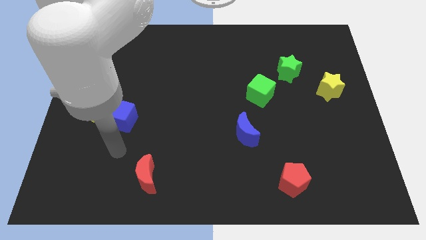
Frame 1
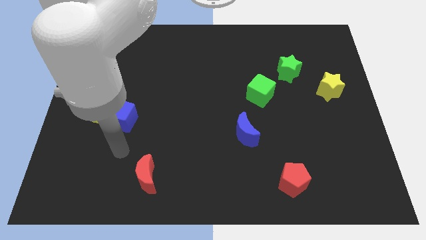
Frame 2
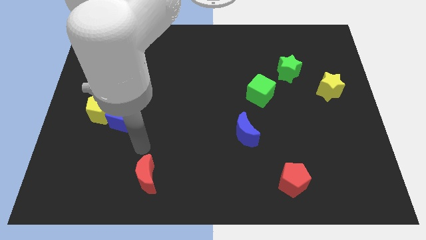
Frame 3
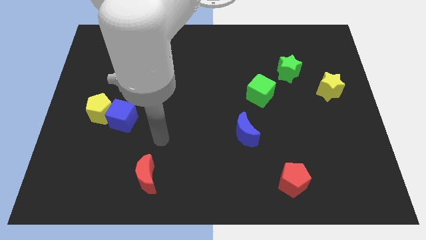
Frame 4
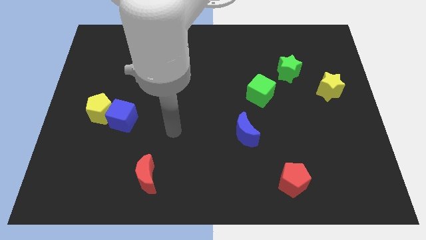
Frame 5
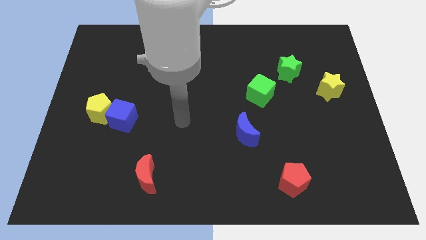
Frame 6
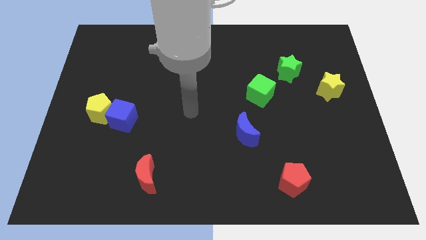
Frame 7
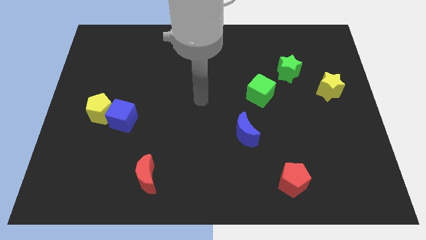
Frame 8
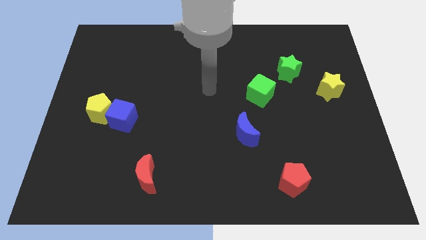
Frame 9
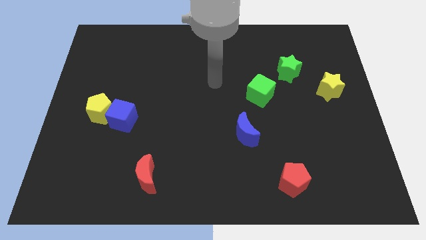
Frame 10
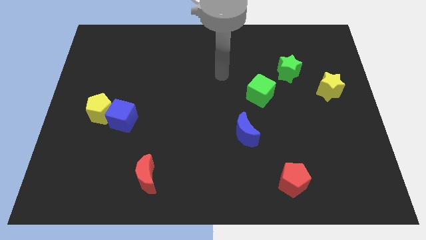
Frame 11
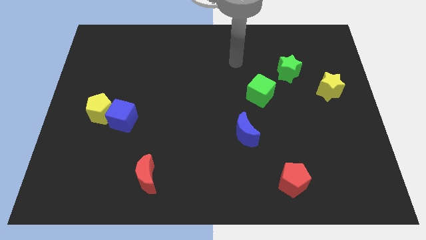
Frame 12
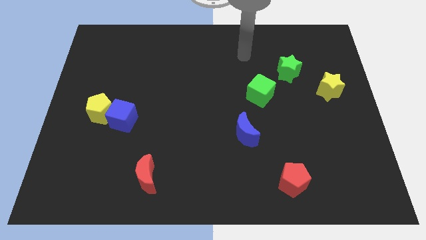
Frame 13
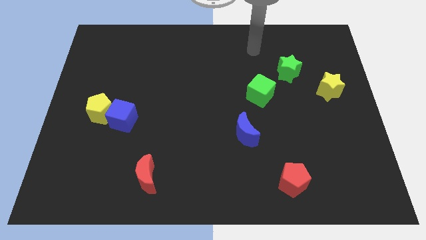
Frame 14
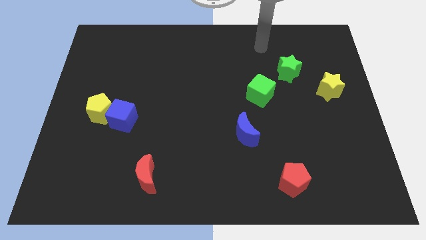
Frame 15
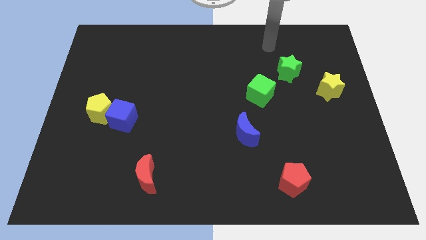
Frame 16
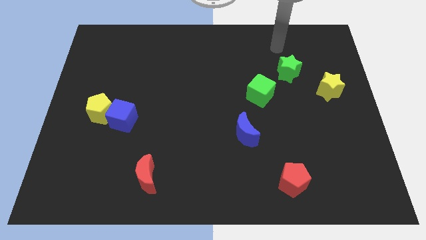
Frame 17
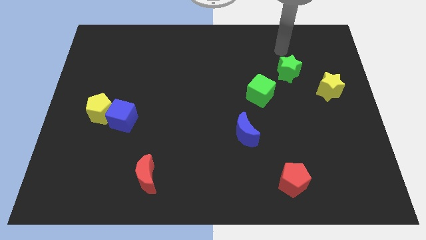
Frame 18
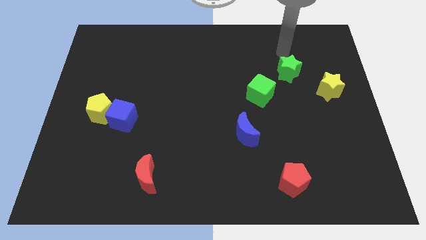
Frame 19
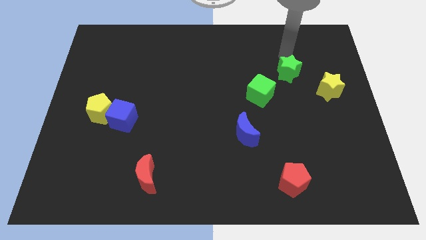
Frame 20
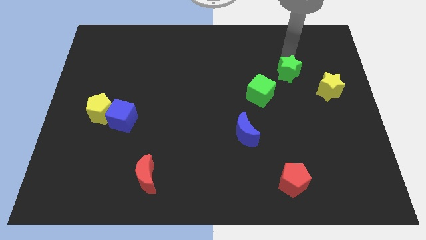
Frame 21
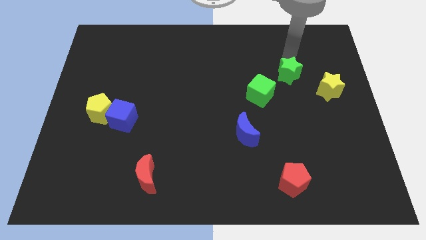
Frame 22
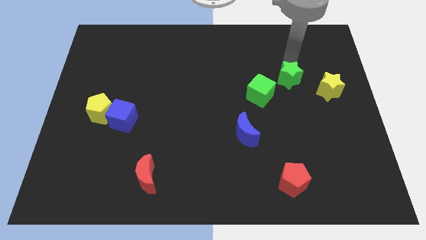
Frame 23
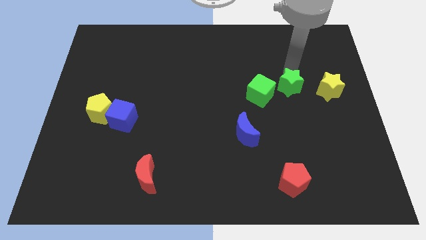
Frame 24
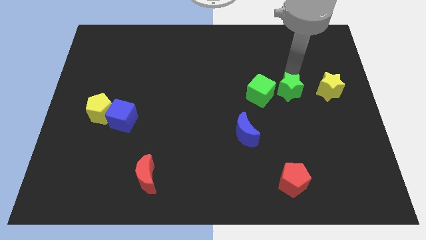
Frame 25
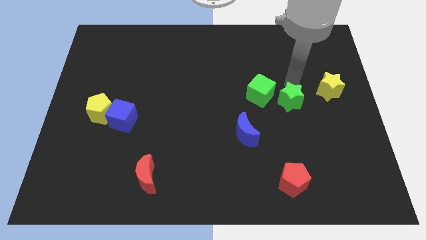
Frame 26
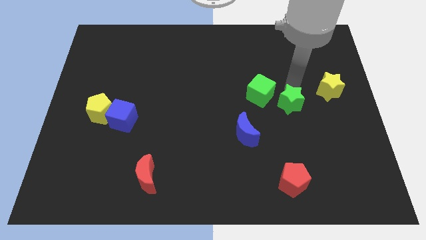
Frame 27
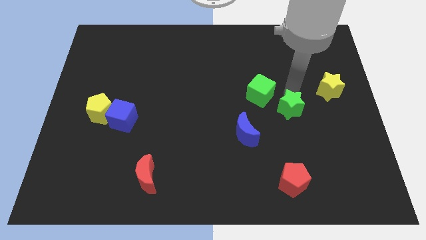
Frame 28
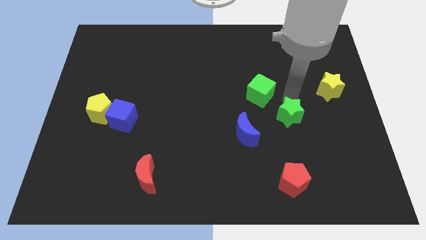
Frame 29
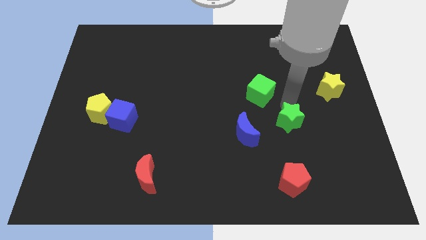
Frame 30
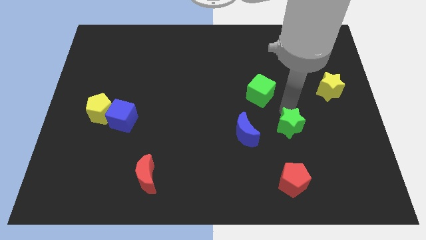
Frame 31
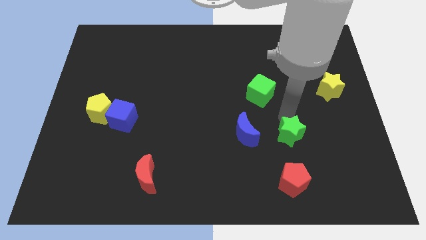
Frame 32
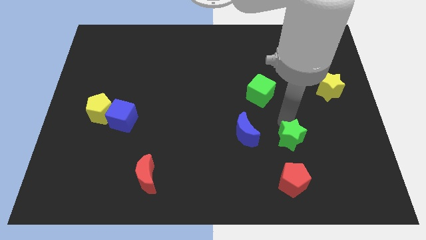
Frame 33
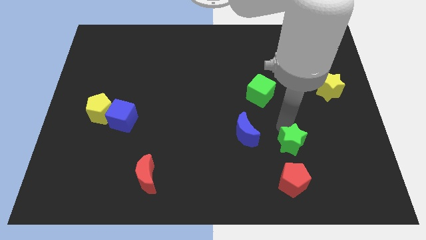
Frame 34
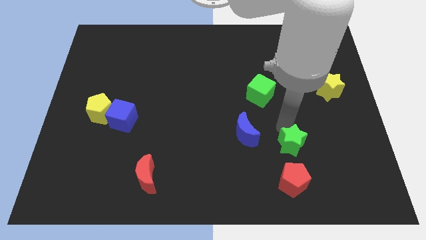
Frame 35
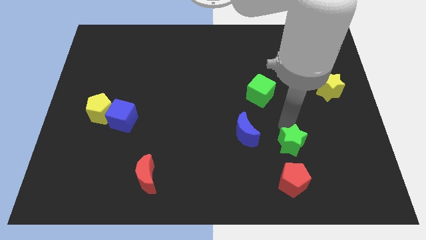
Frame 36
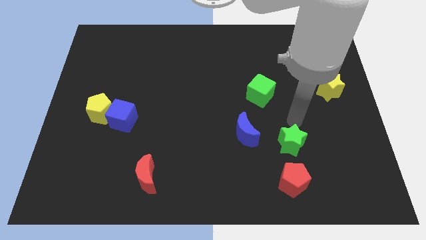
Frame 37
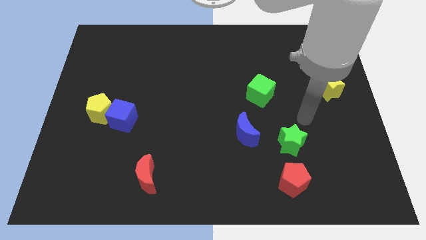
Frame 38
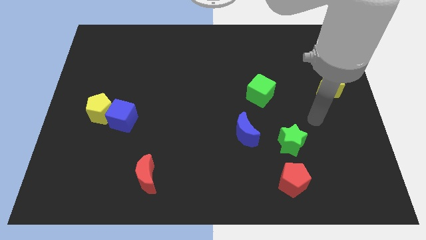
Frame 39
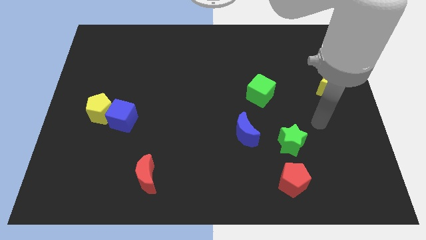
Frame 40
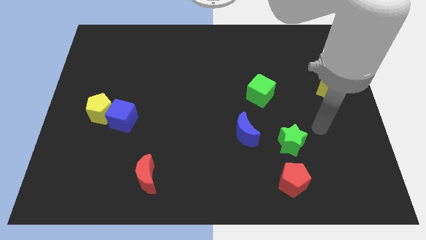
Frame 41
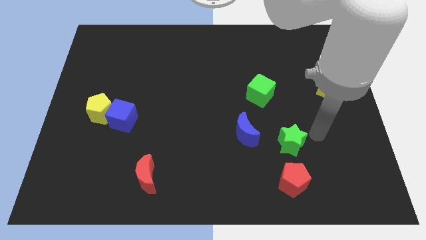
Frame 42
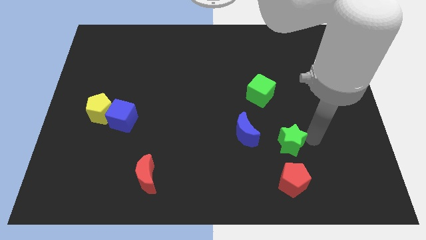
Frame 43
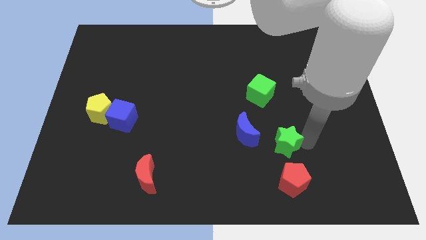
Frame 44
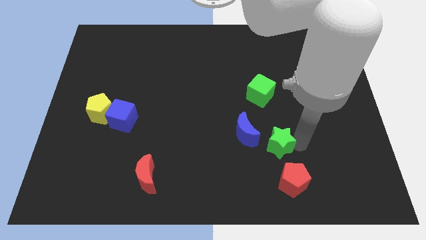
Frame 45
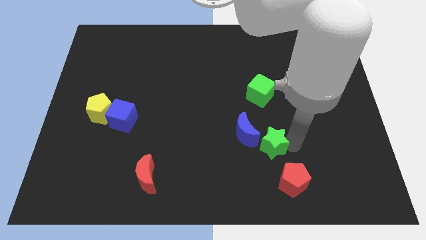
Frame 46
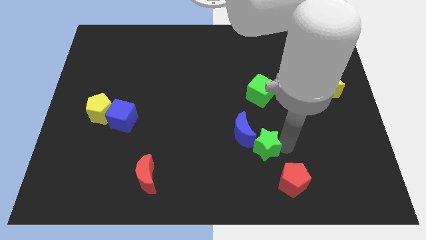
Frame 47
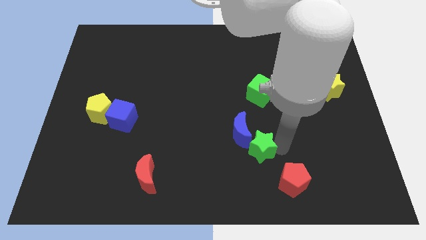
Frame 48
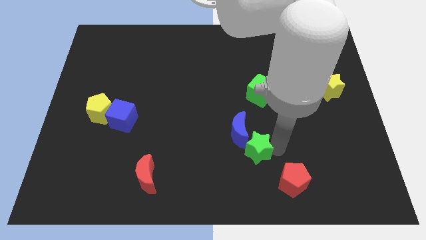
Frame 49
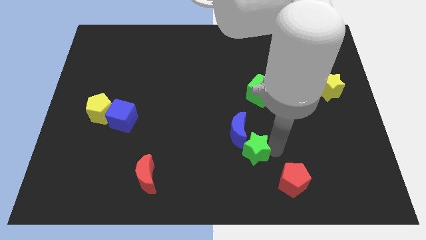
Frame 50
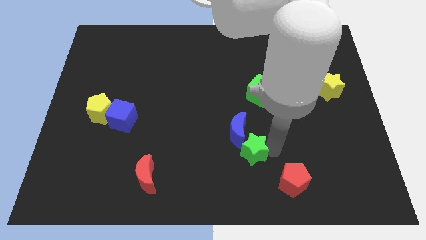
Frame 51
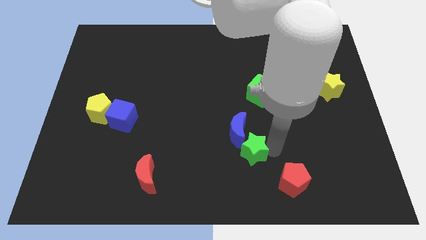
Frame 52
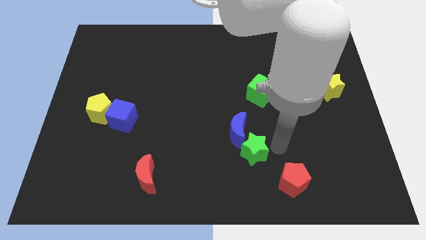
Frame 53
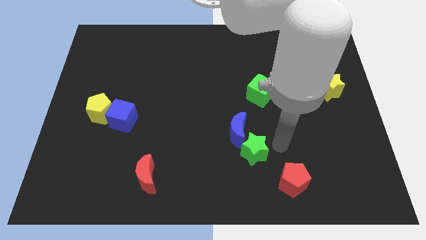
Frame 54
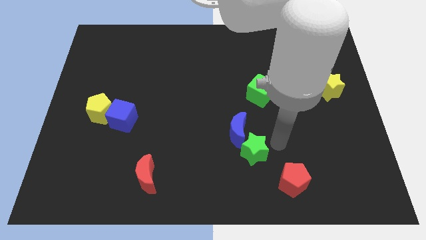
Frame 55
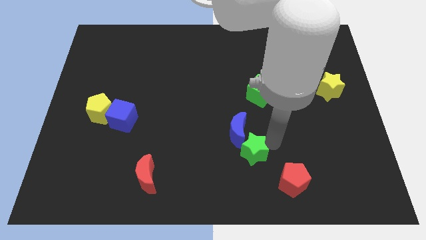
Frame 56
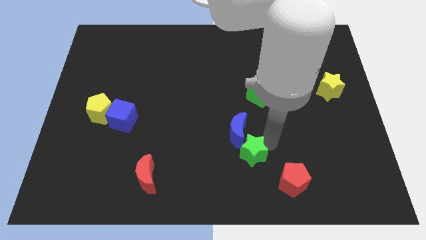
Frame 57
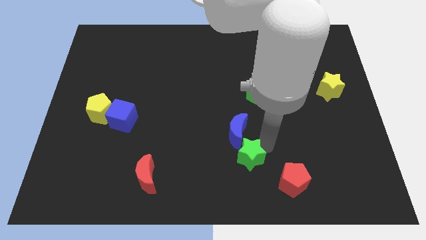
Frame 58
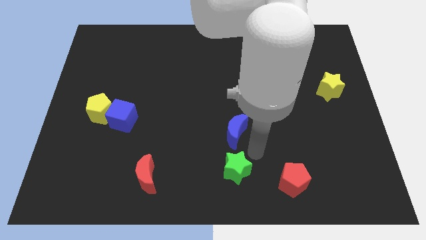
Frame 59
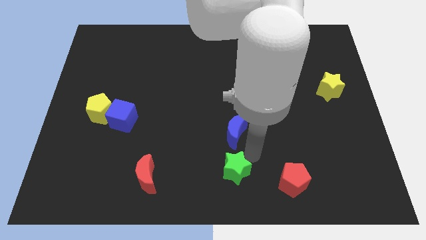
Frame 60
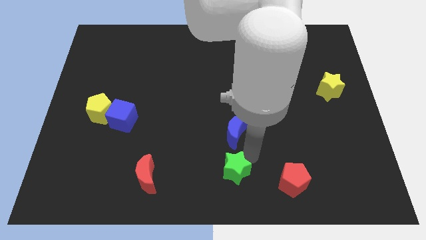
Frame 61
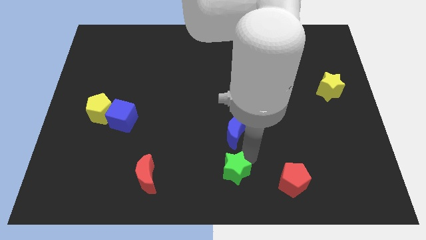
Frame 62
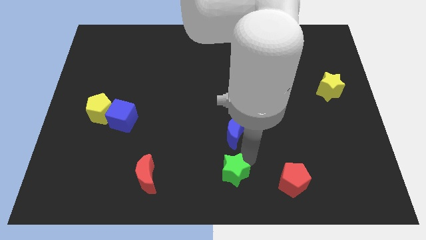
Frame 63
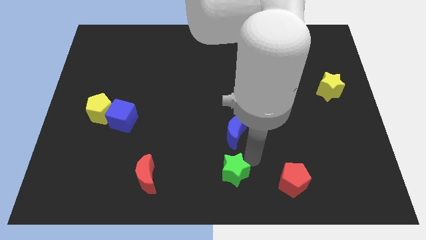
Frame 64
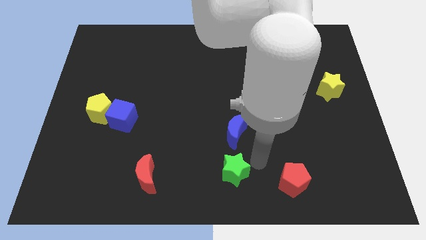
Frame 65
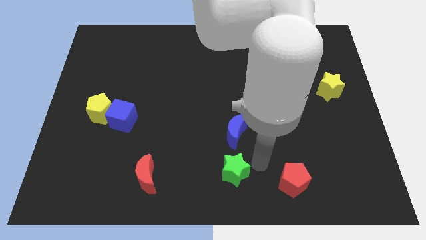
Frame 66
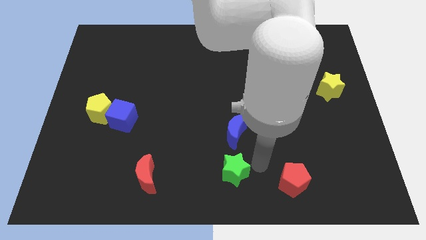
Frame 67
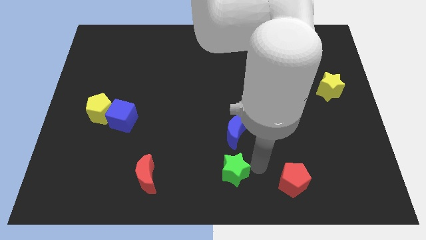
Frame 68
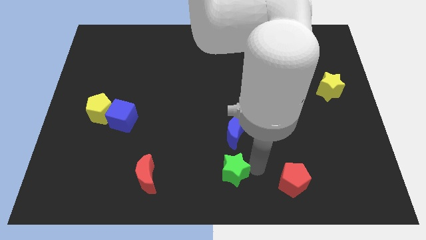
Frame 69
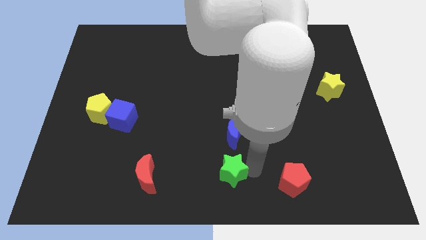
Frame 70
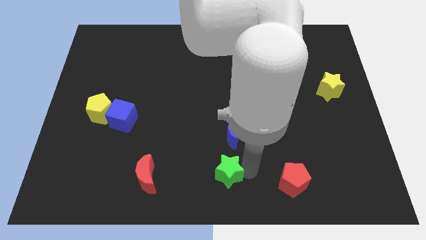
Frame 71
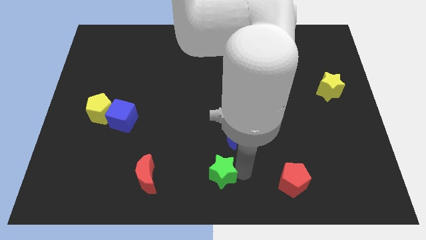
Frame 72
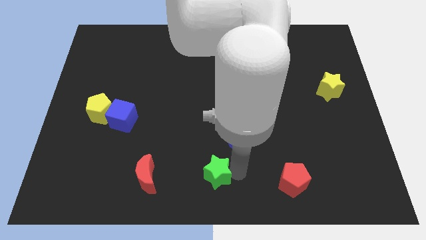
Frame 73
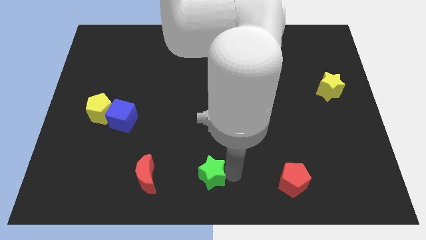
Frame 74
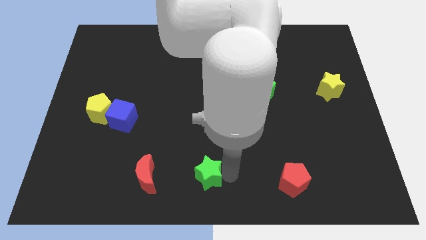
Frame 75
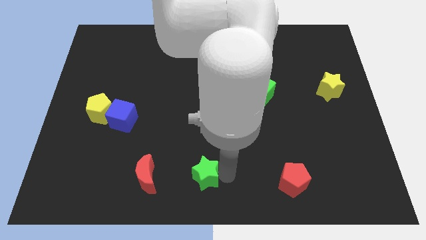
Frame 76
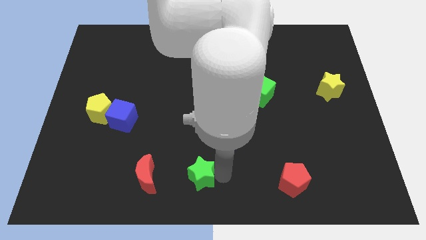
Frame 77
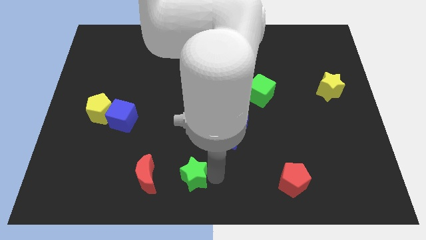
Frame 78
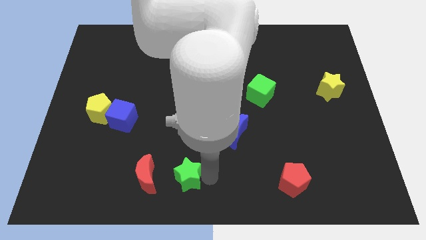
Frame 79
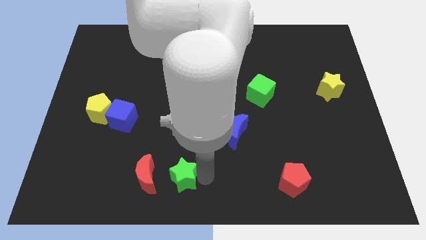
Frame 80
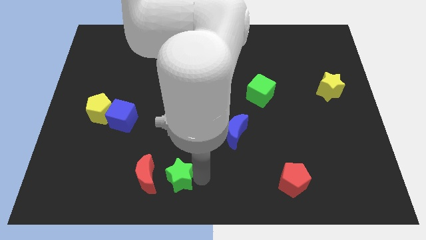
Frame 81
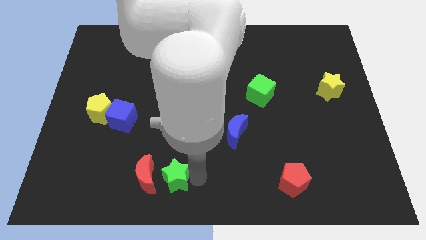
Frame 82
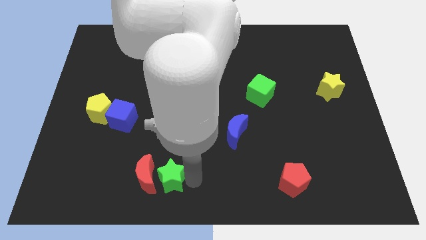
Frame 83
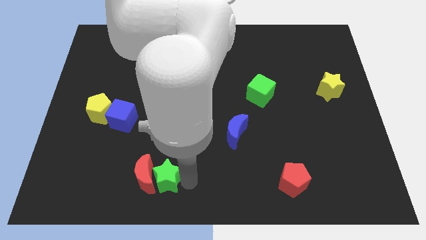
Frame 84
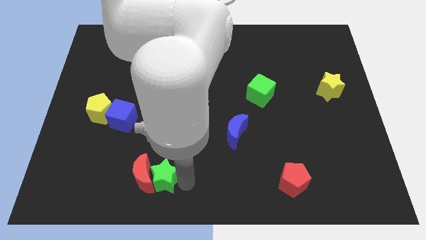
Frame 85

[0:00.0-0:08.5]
move the green star close to the red moon
